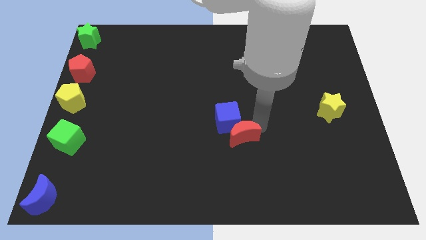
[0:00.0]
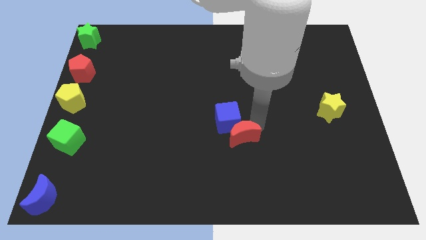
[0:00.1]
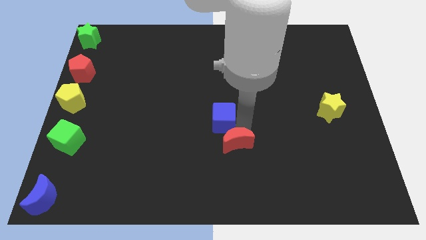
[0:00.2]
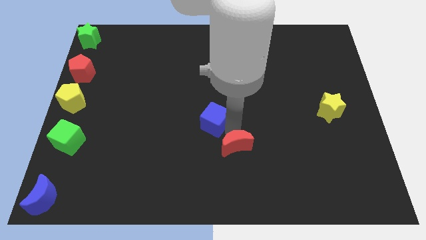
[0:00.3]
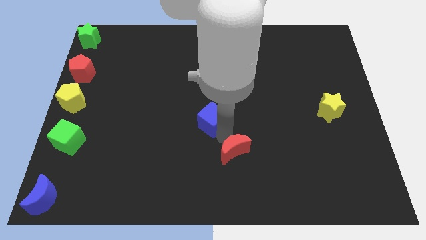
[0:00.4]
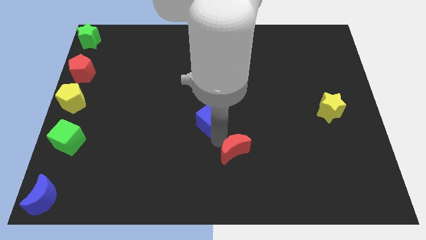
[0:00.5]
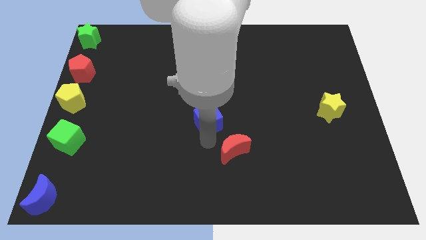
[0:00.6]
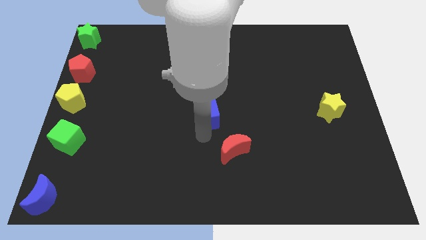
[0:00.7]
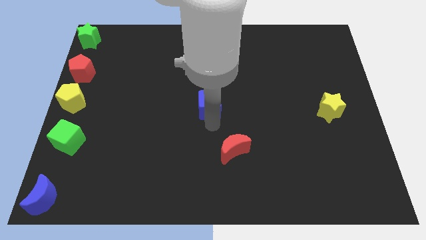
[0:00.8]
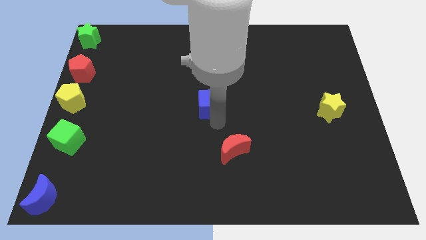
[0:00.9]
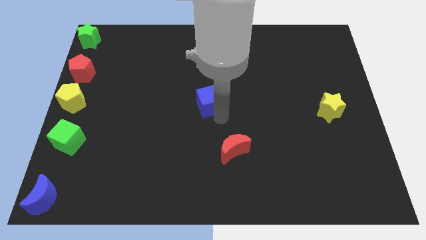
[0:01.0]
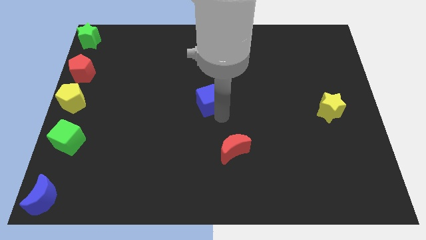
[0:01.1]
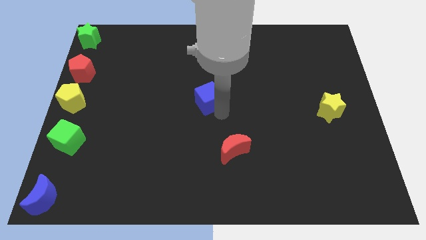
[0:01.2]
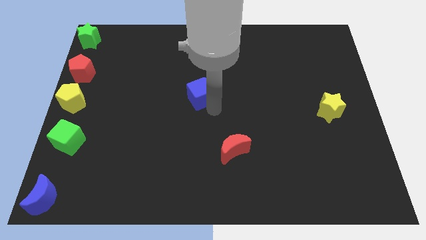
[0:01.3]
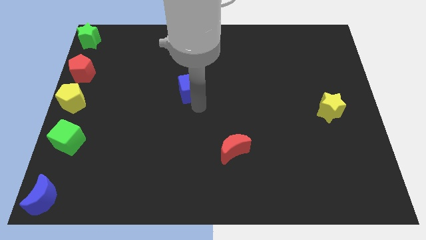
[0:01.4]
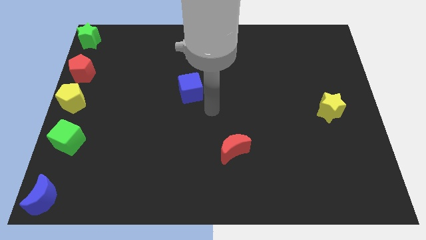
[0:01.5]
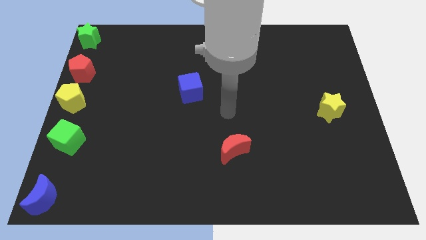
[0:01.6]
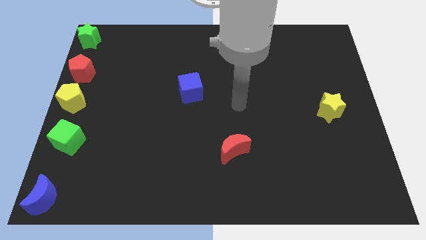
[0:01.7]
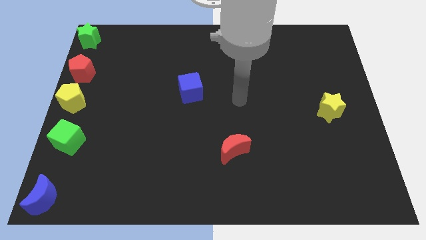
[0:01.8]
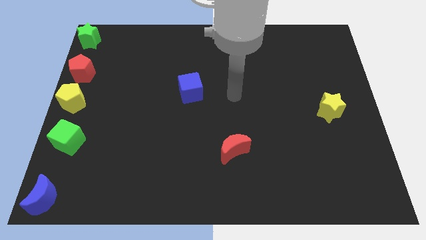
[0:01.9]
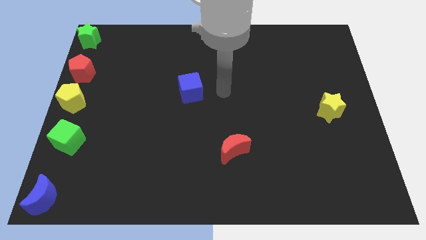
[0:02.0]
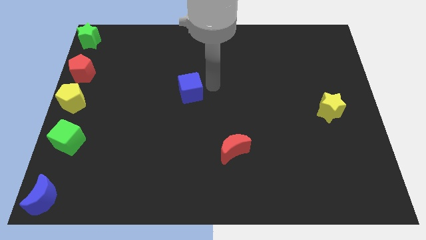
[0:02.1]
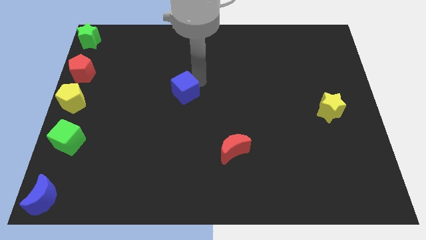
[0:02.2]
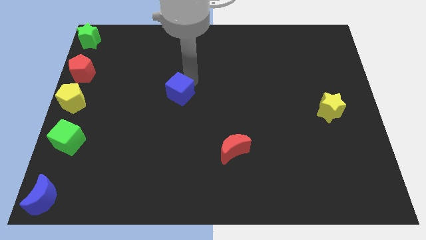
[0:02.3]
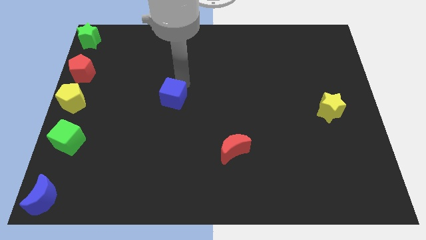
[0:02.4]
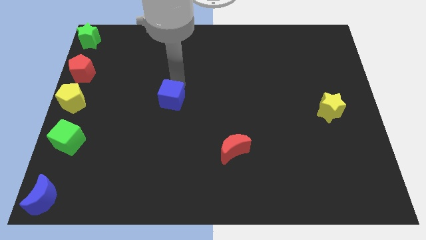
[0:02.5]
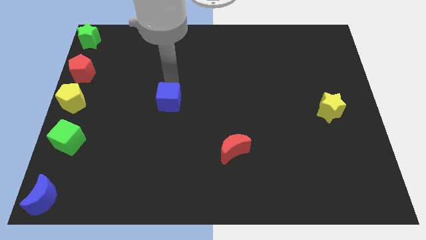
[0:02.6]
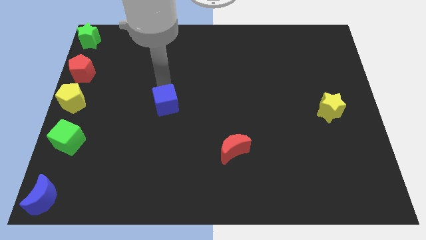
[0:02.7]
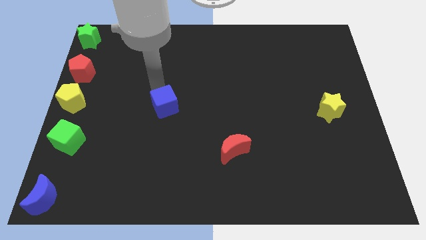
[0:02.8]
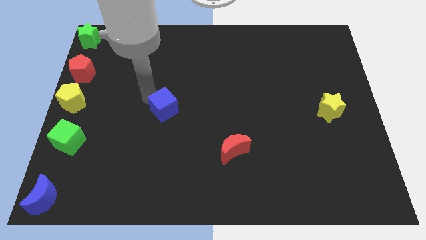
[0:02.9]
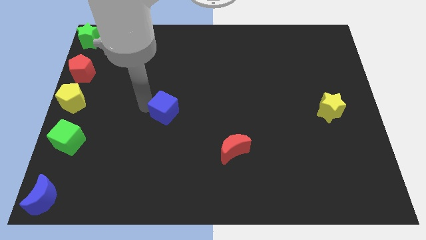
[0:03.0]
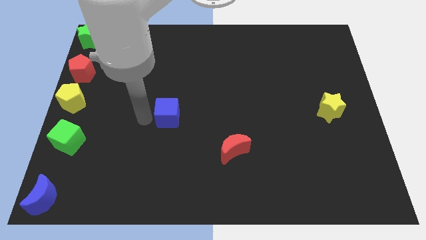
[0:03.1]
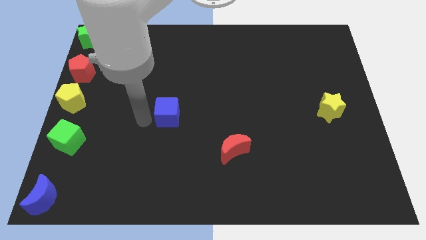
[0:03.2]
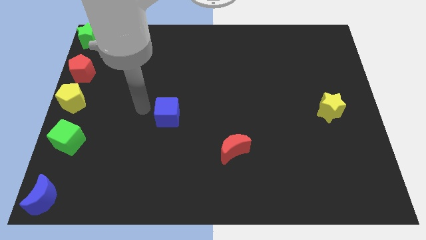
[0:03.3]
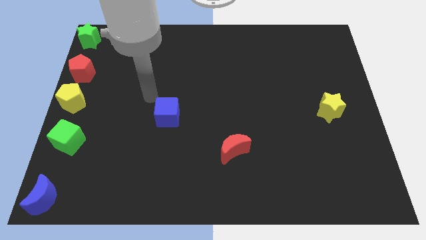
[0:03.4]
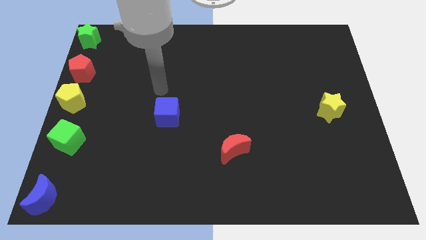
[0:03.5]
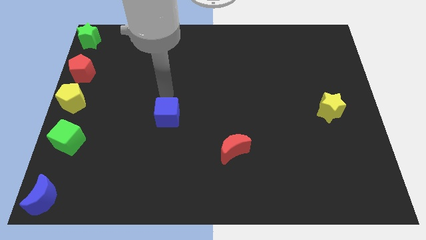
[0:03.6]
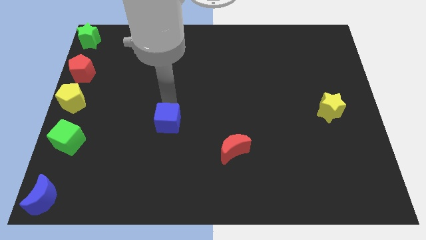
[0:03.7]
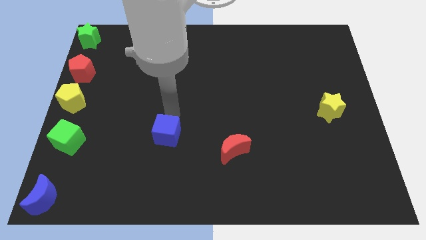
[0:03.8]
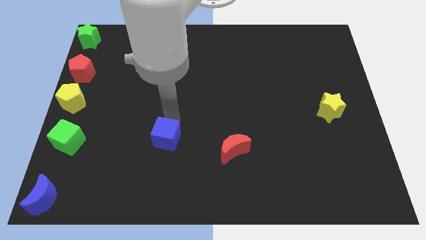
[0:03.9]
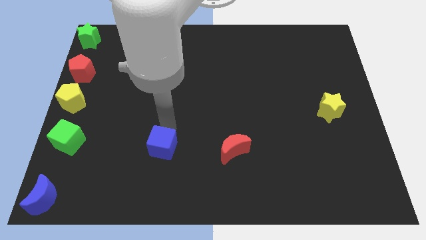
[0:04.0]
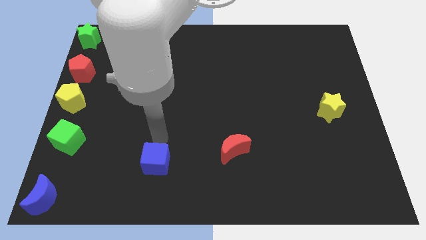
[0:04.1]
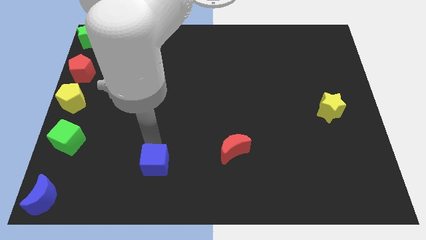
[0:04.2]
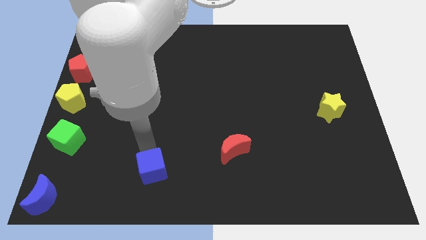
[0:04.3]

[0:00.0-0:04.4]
separate blue cube from red crescent

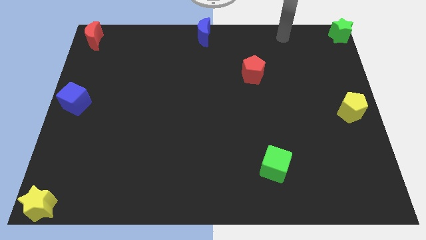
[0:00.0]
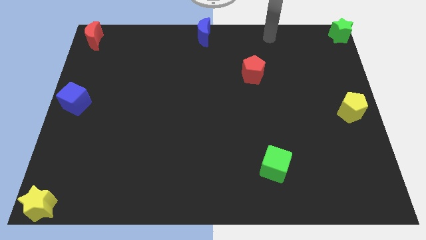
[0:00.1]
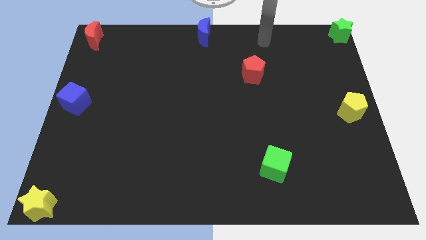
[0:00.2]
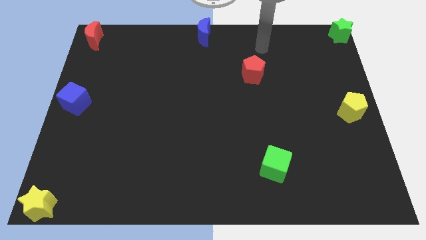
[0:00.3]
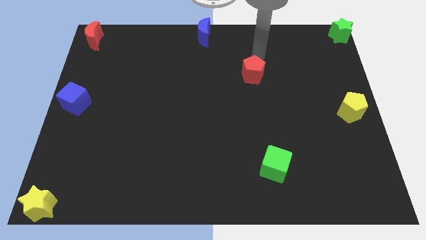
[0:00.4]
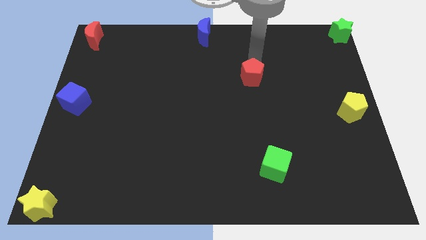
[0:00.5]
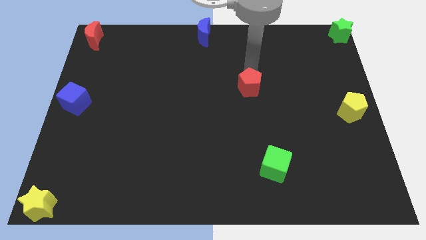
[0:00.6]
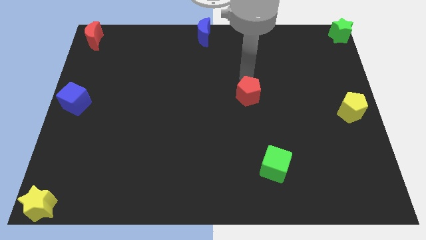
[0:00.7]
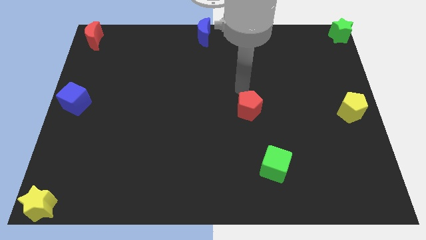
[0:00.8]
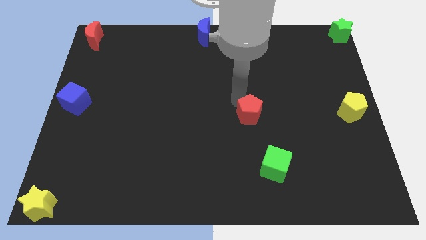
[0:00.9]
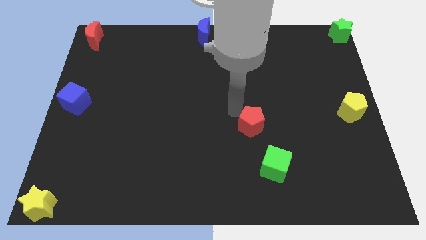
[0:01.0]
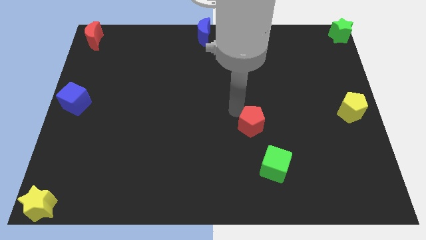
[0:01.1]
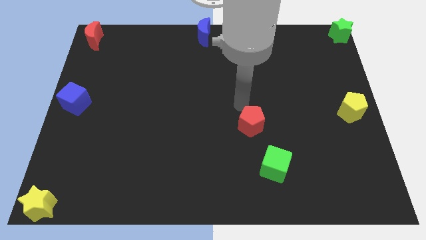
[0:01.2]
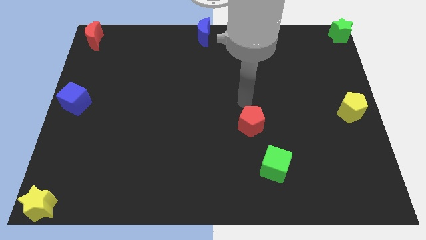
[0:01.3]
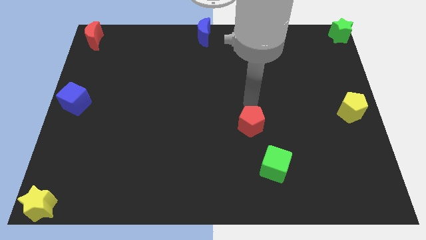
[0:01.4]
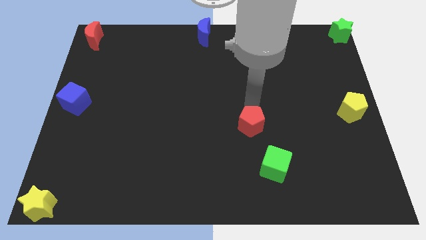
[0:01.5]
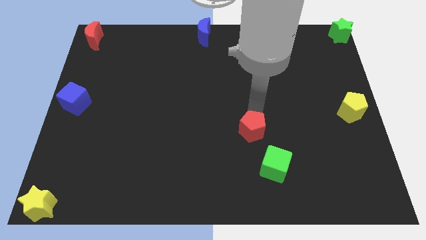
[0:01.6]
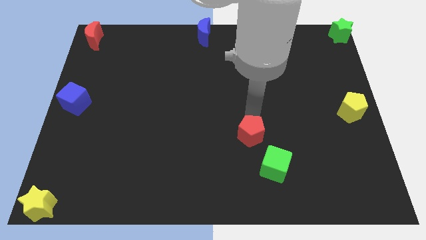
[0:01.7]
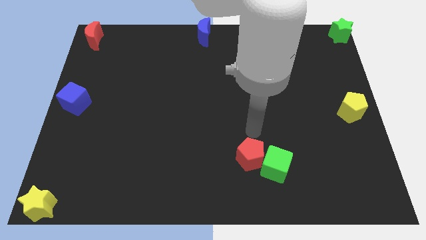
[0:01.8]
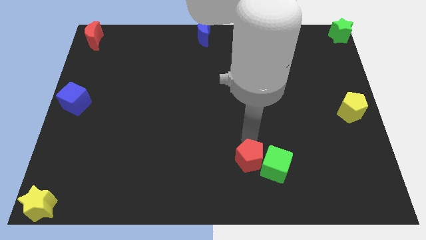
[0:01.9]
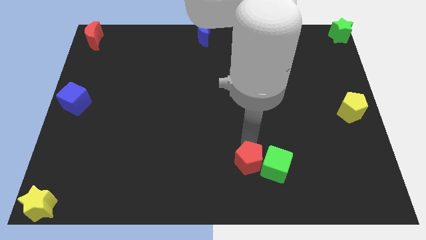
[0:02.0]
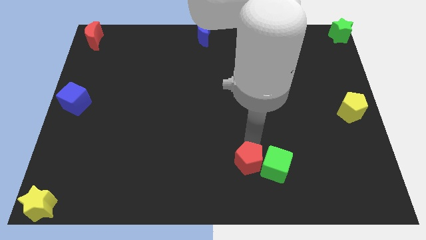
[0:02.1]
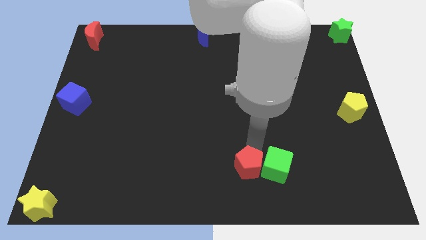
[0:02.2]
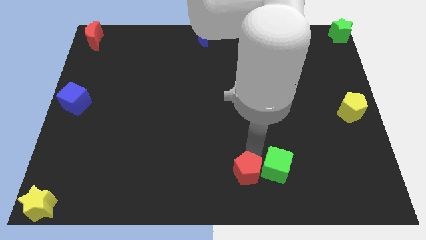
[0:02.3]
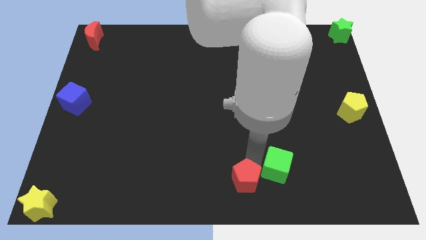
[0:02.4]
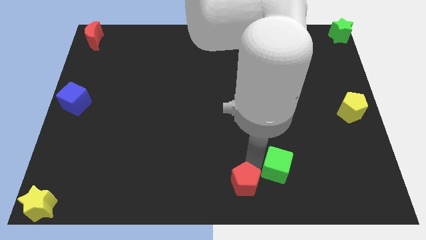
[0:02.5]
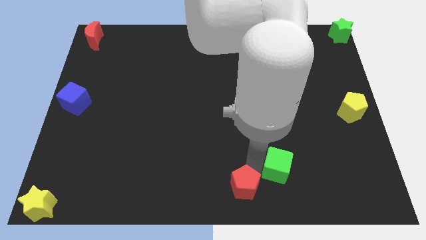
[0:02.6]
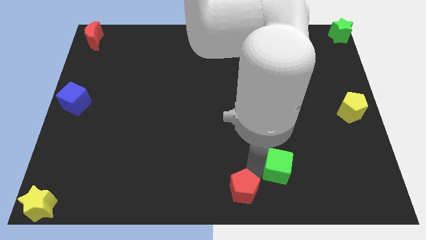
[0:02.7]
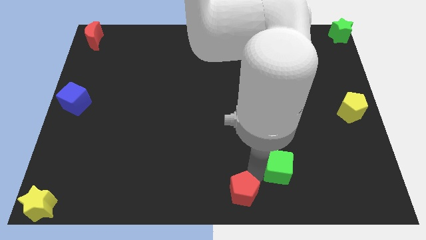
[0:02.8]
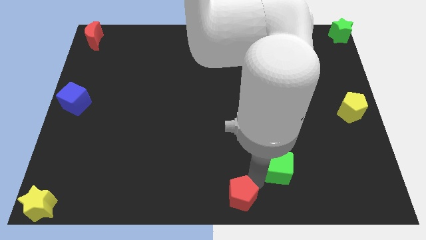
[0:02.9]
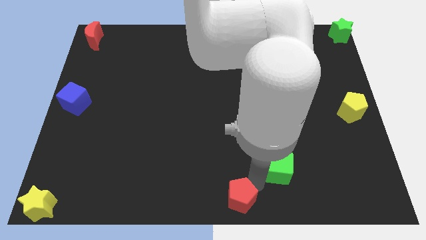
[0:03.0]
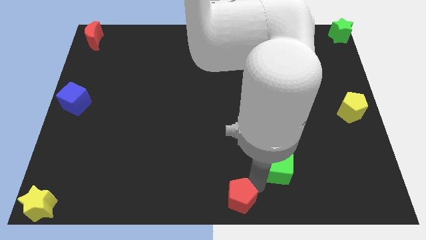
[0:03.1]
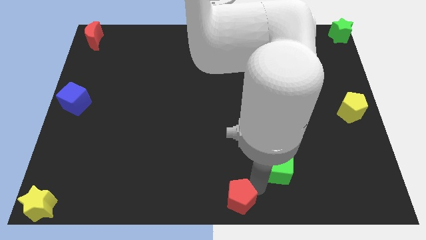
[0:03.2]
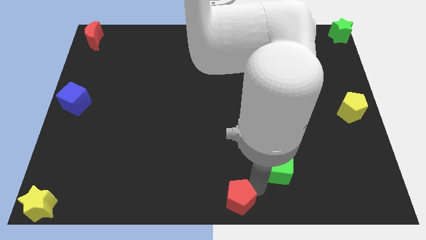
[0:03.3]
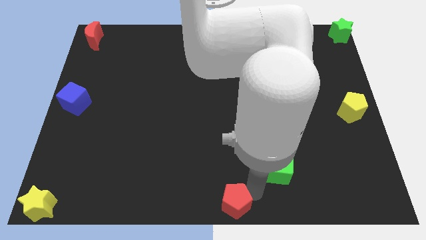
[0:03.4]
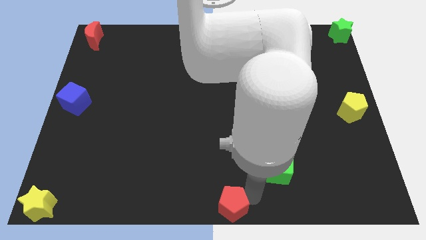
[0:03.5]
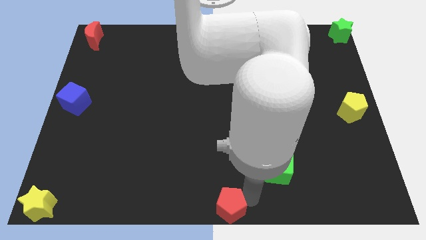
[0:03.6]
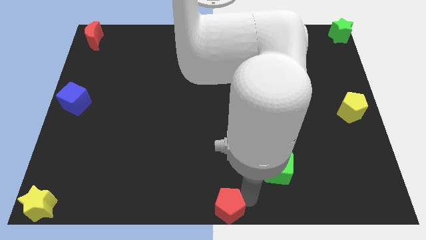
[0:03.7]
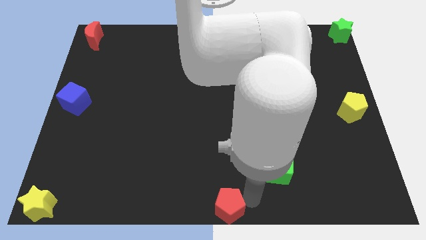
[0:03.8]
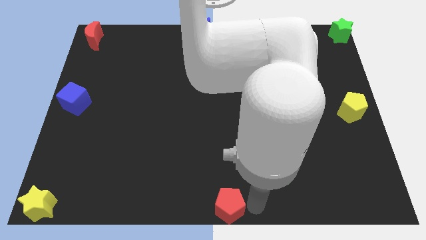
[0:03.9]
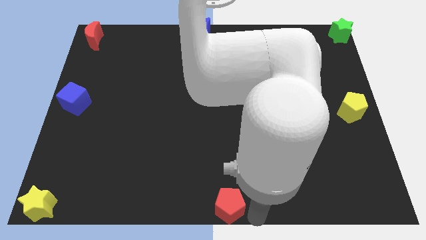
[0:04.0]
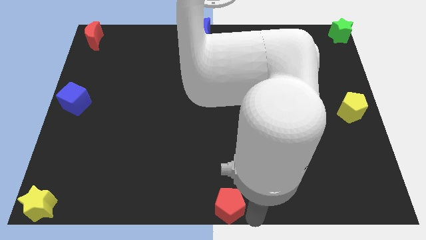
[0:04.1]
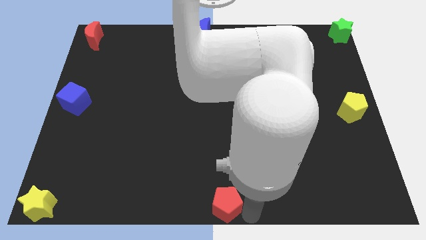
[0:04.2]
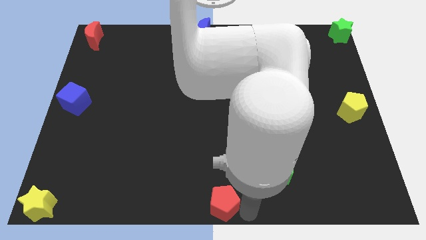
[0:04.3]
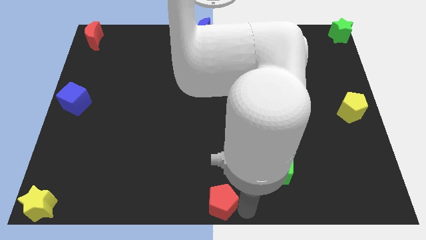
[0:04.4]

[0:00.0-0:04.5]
move the red pentagon to the bottom center of the board
